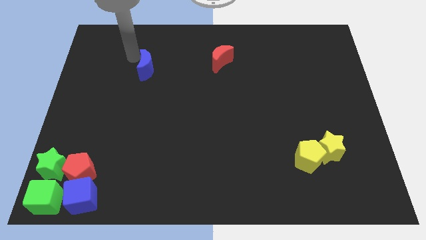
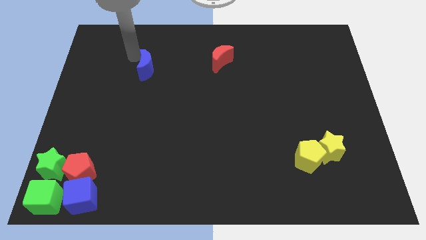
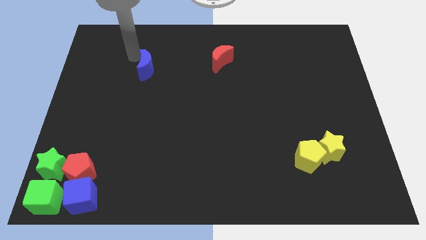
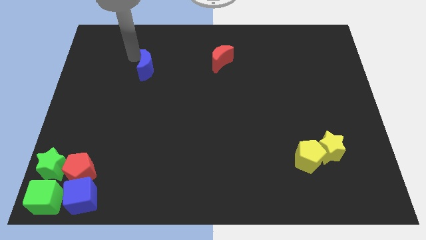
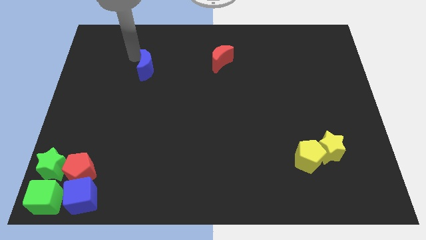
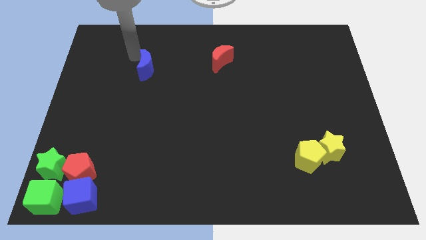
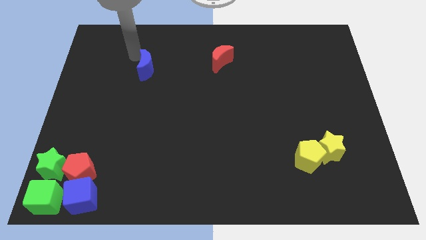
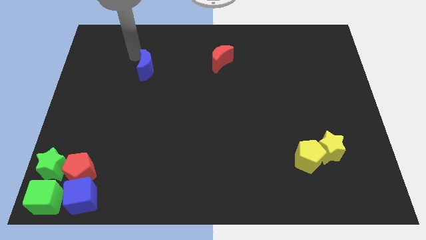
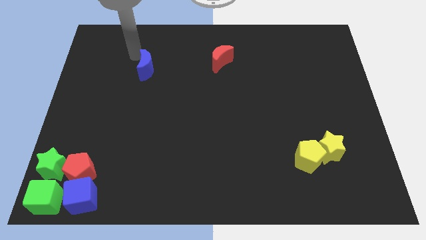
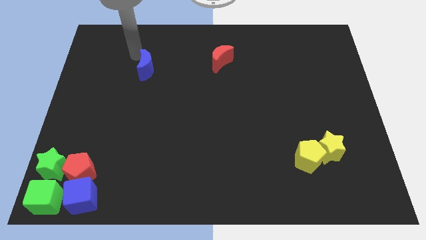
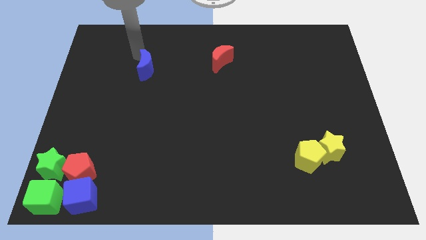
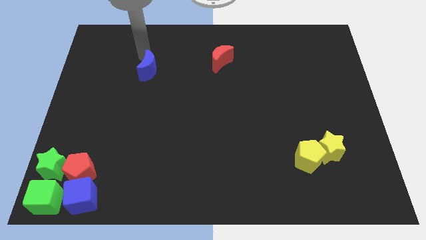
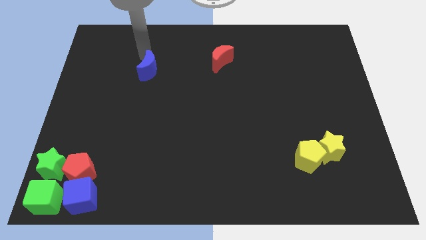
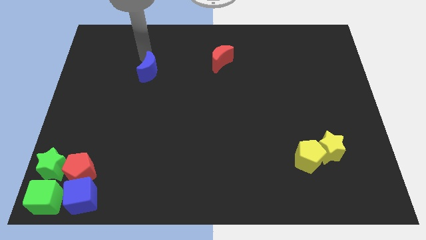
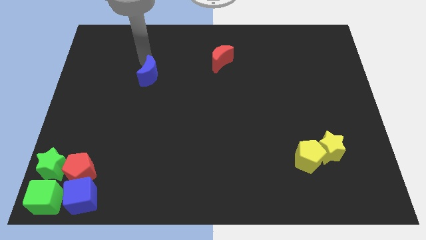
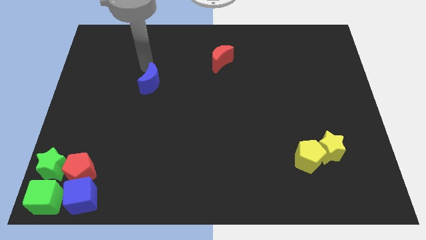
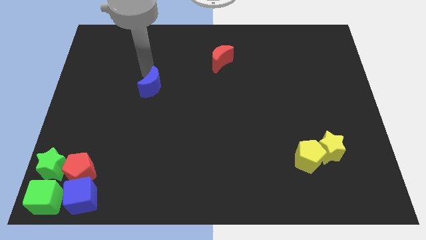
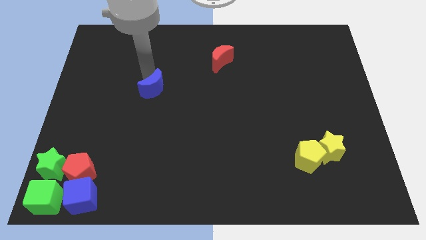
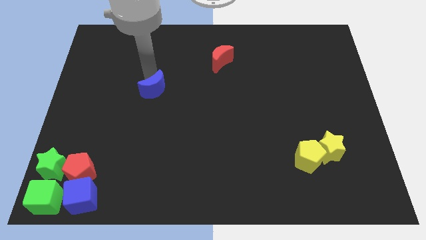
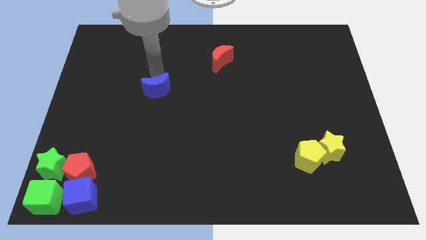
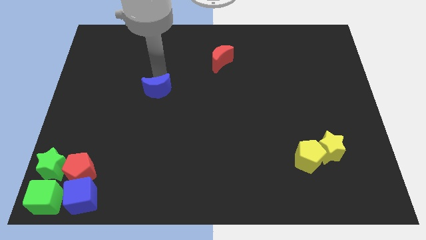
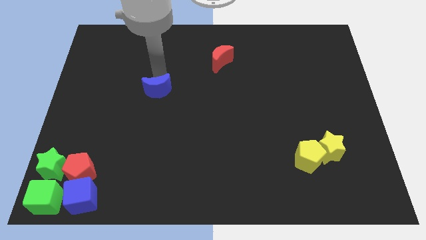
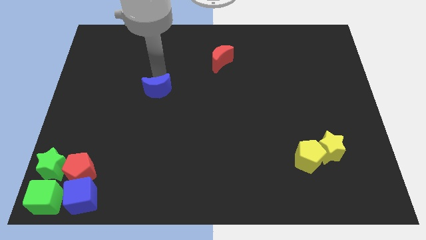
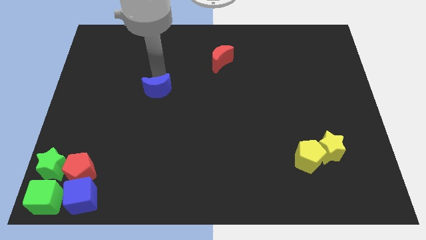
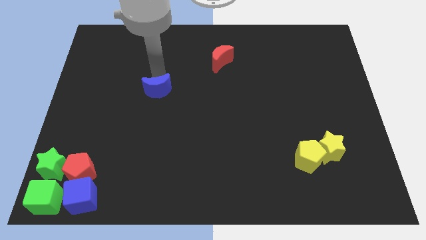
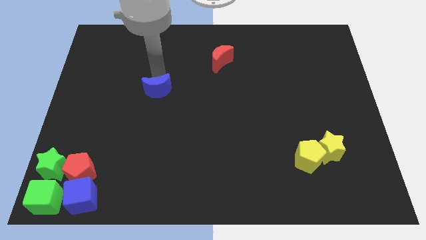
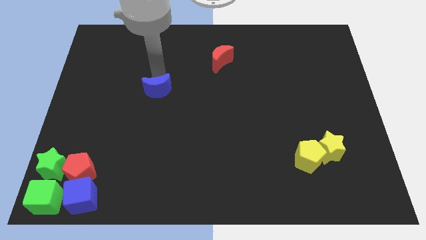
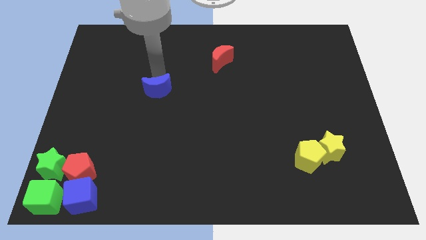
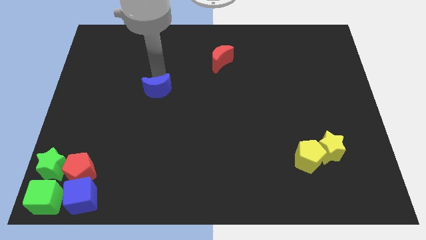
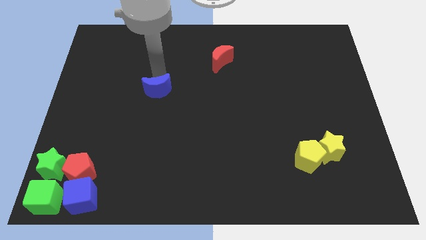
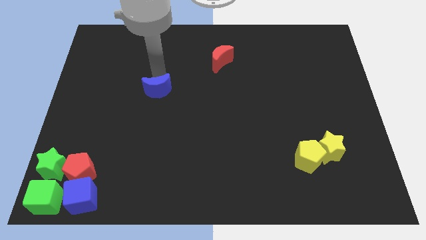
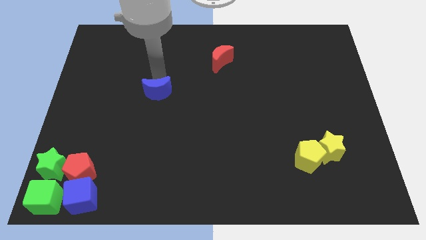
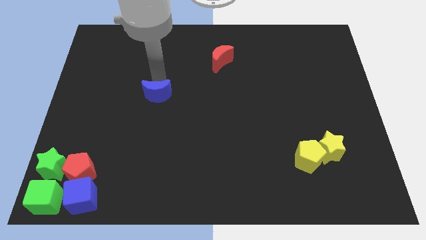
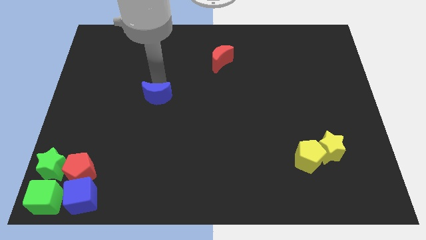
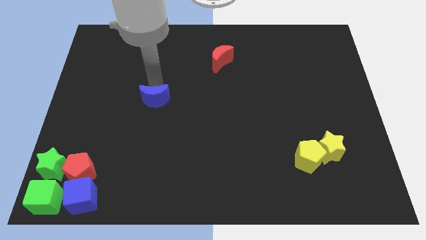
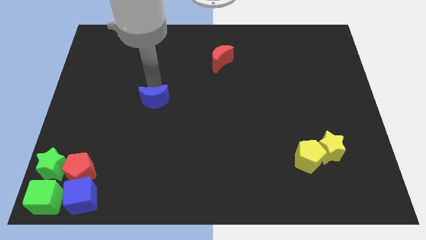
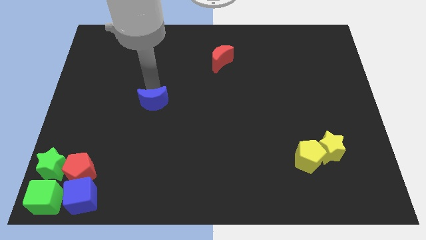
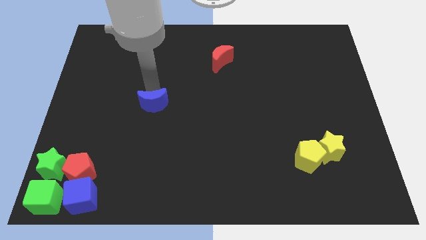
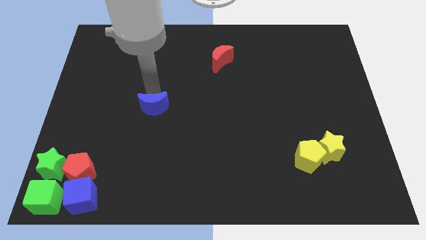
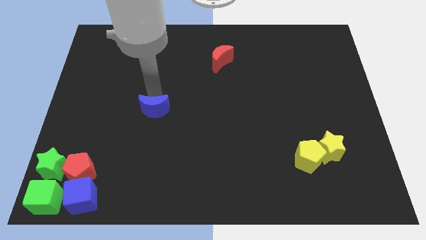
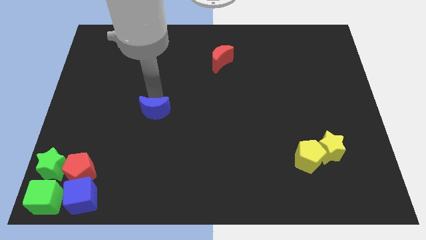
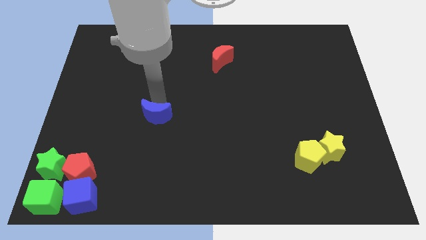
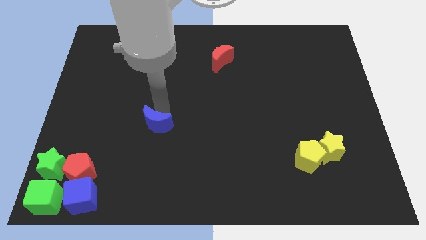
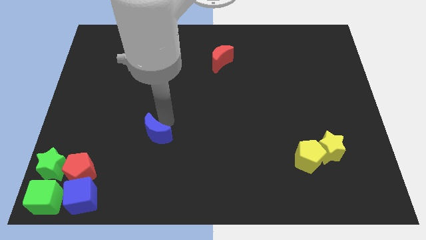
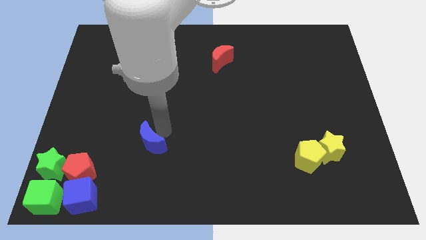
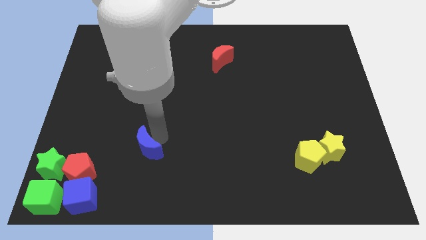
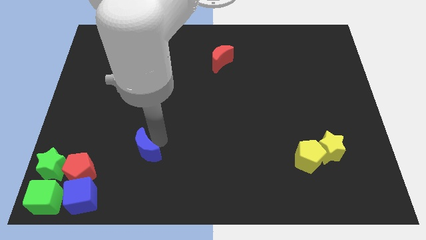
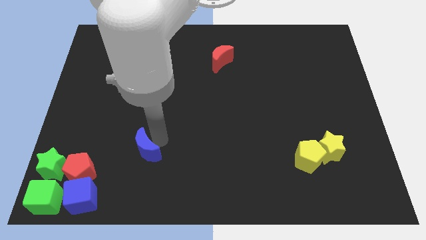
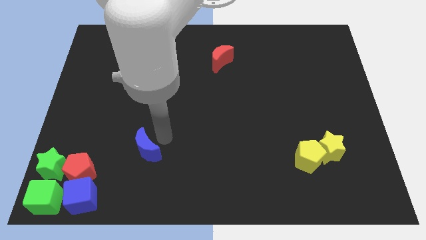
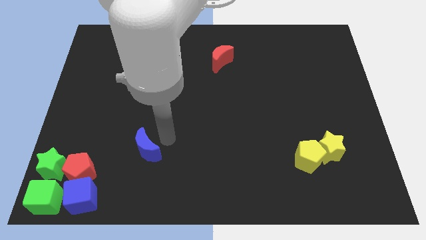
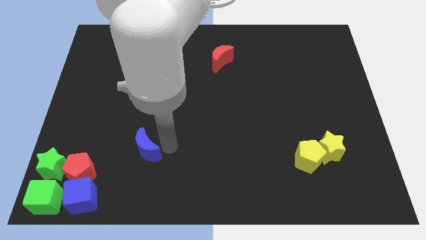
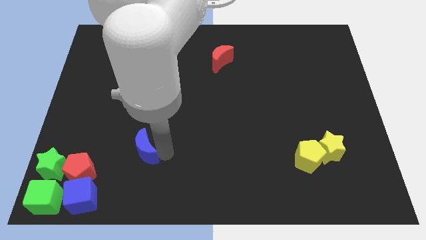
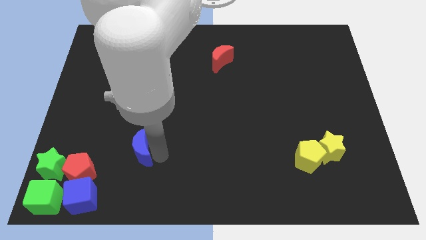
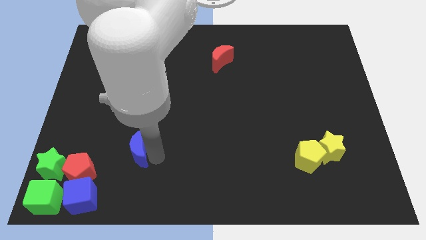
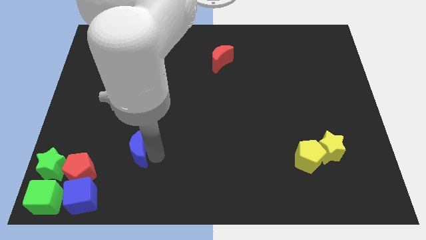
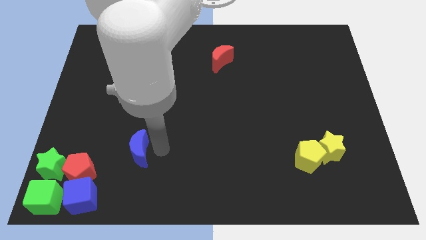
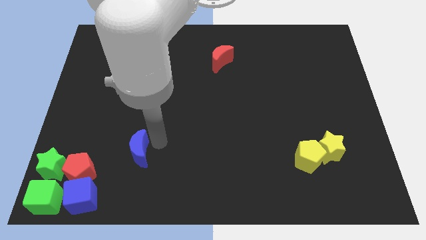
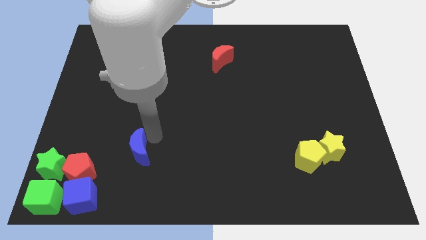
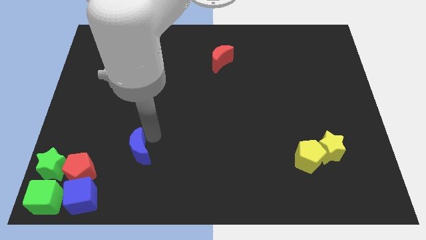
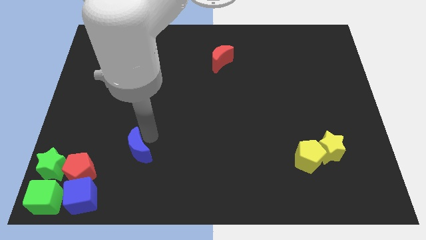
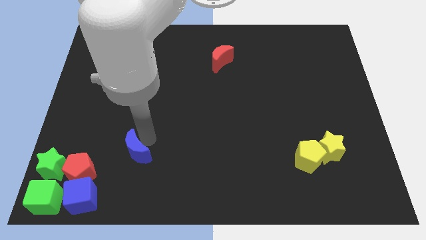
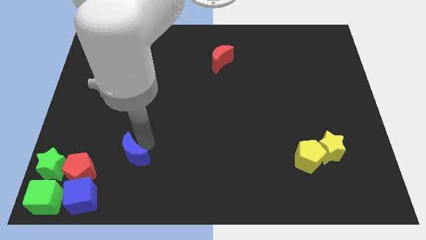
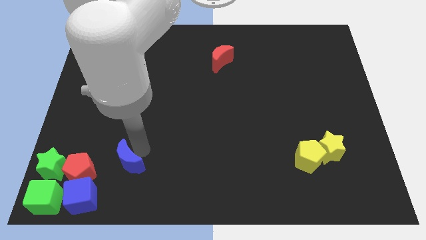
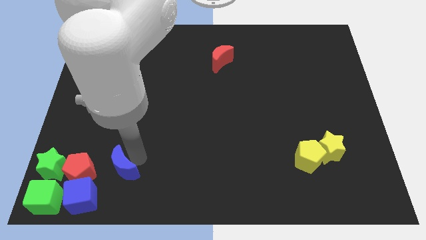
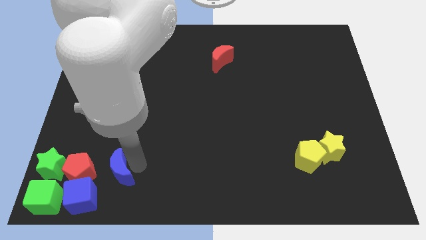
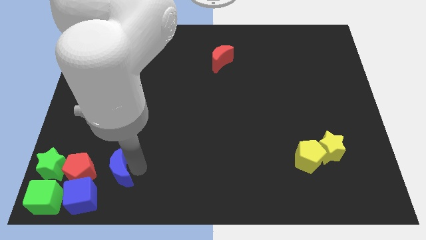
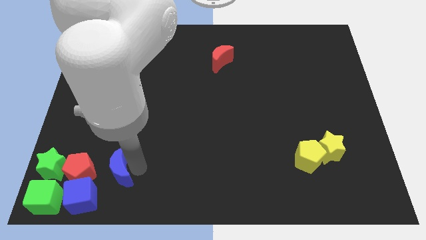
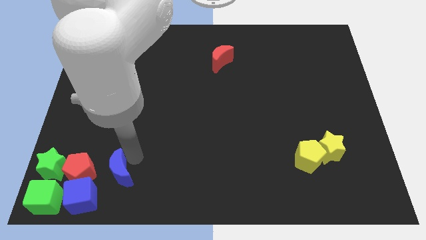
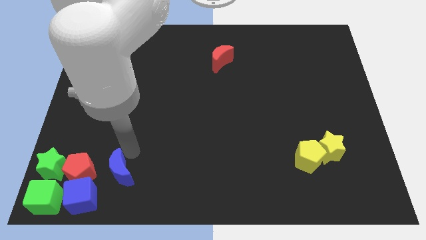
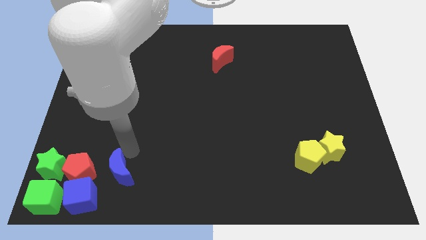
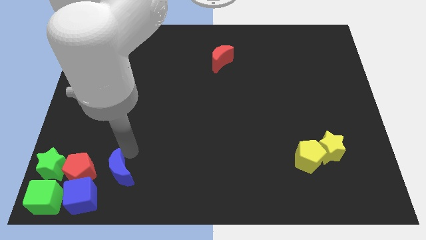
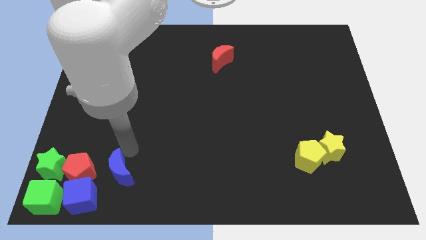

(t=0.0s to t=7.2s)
place the blue crescent to the right of the red pentagon

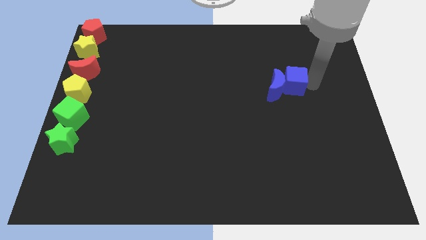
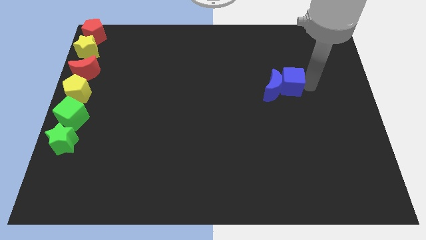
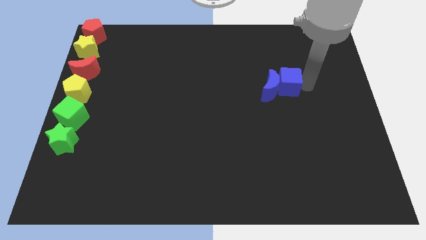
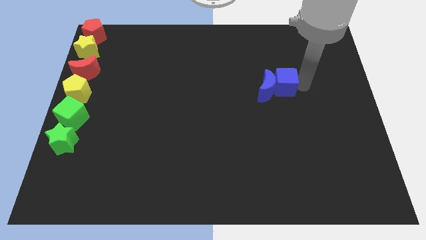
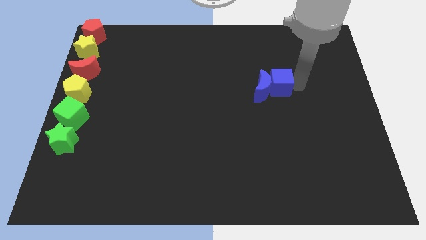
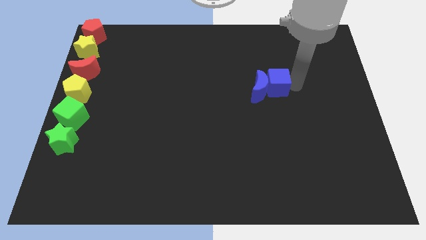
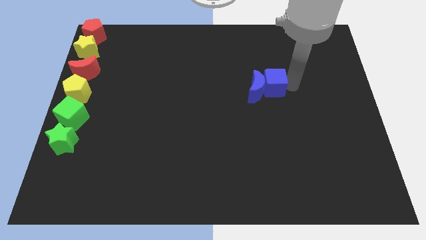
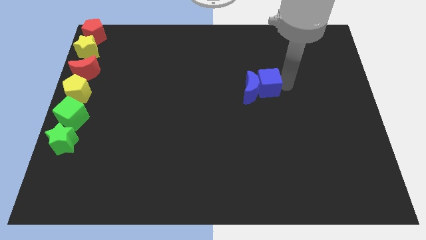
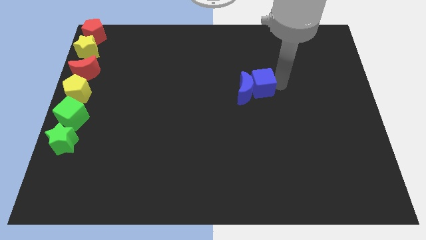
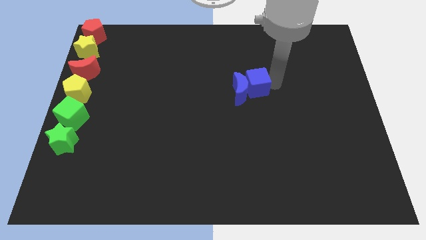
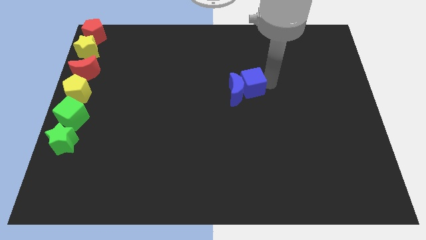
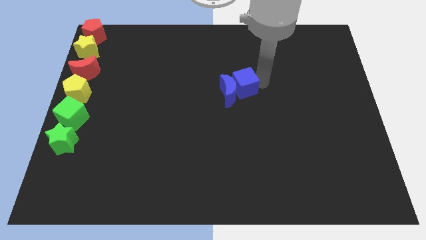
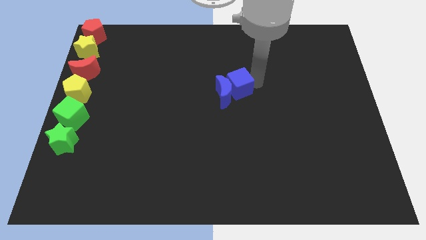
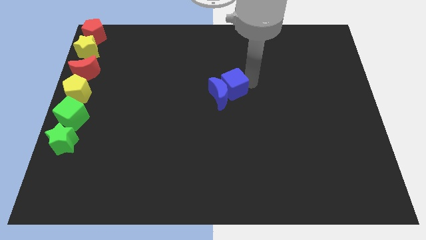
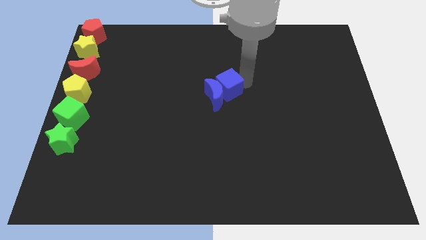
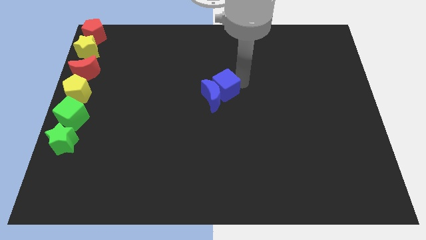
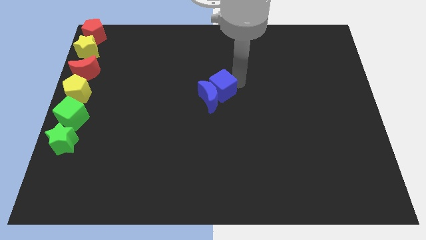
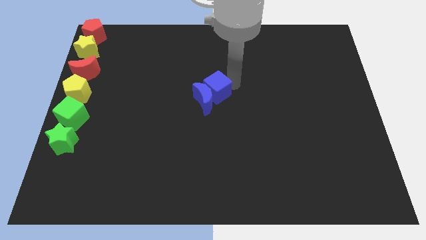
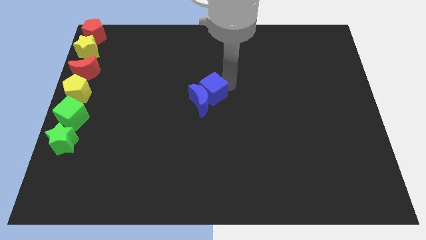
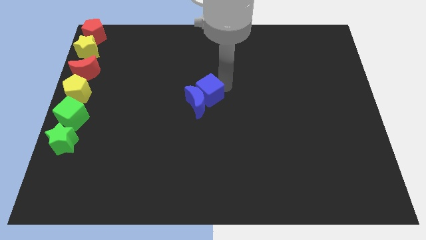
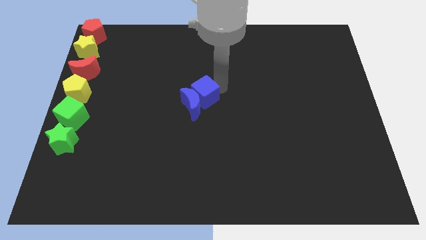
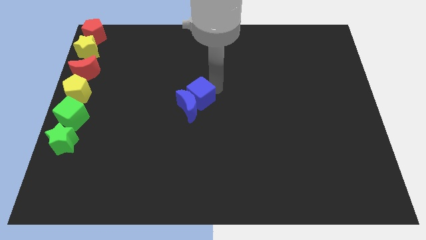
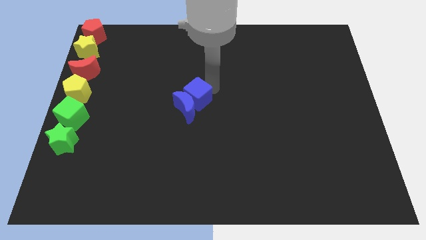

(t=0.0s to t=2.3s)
move the blue blocks towards the left side of the board
